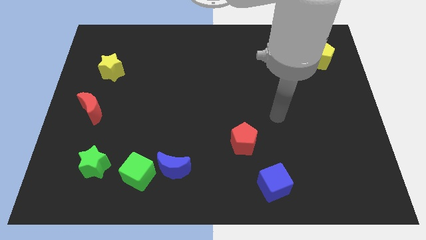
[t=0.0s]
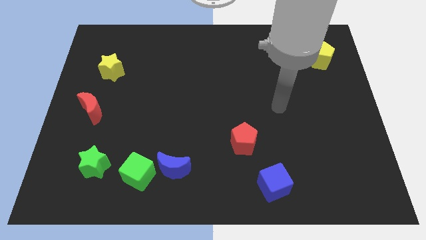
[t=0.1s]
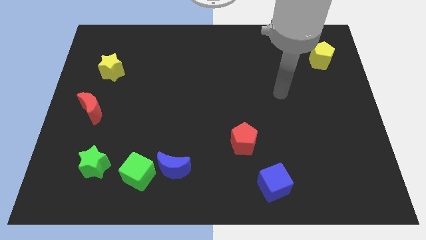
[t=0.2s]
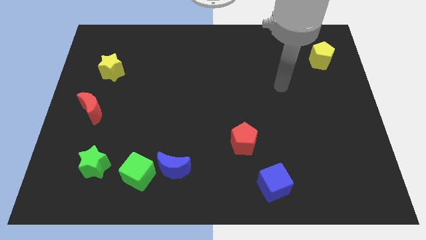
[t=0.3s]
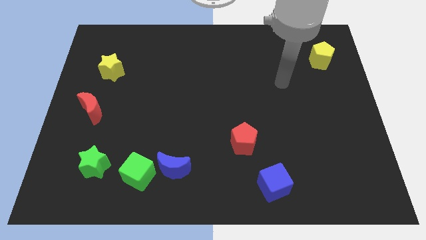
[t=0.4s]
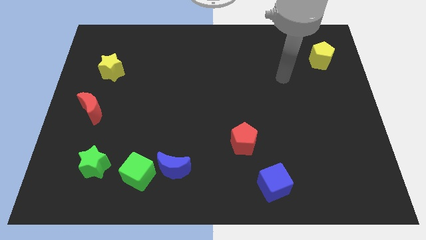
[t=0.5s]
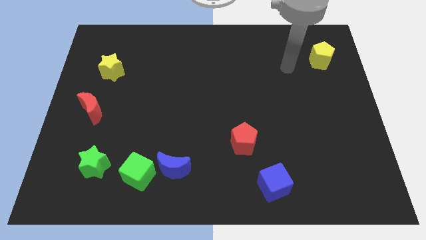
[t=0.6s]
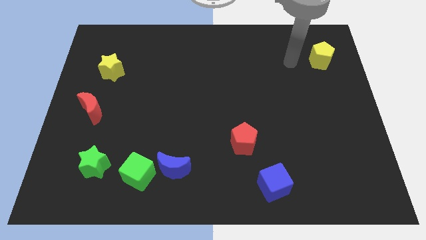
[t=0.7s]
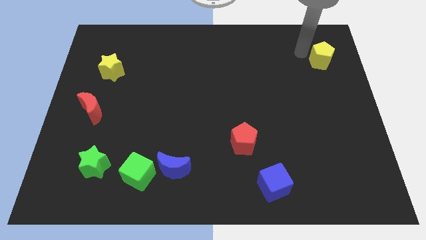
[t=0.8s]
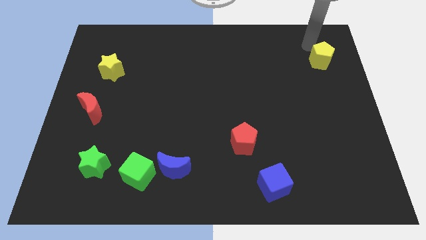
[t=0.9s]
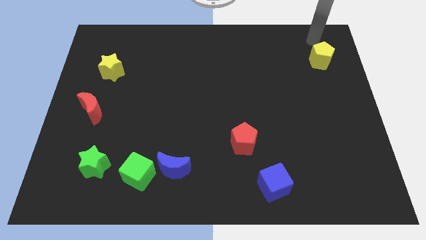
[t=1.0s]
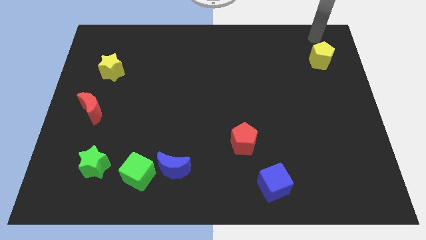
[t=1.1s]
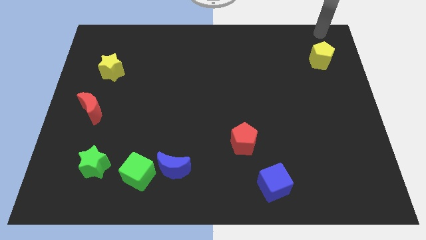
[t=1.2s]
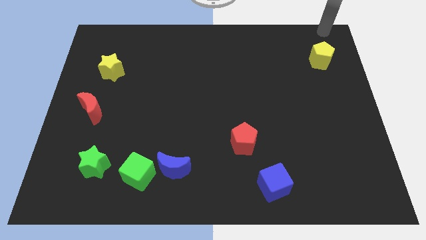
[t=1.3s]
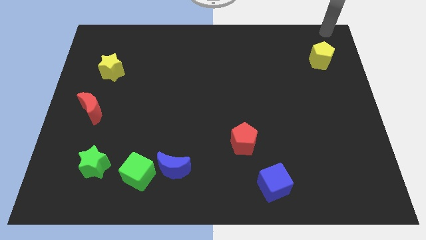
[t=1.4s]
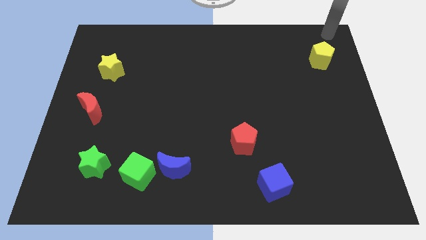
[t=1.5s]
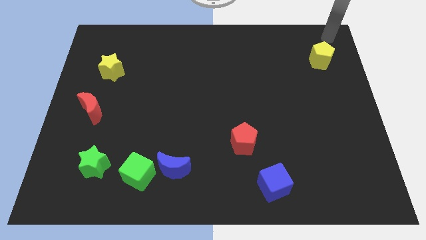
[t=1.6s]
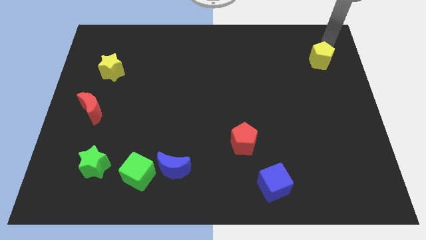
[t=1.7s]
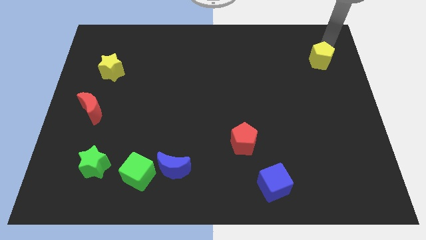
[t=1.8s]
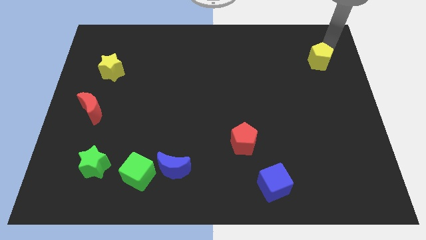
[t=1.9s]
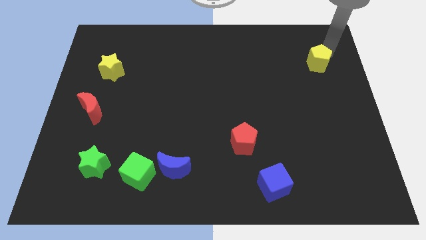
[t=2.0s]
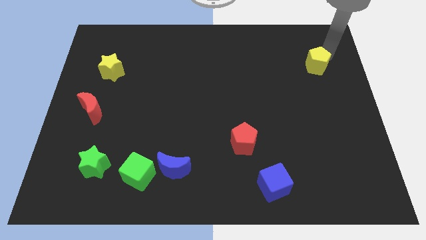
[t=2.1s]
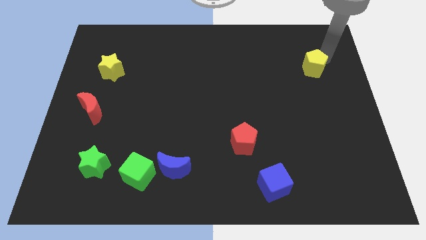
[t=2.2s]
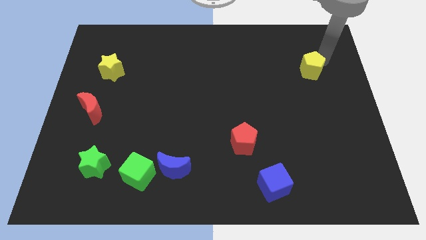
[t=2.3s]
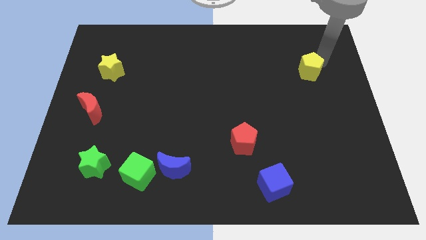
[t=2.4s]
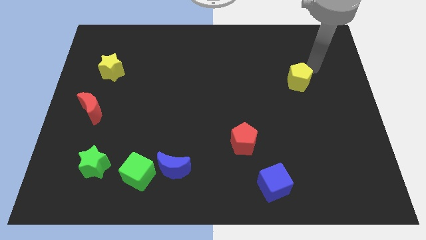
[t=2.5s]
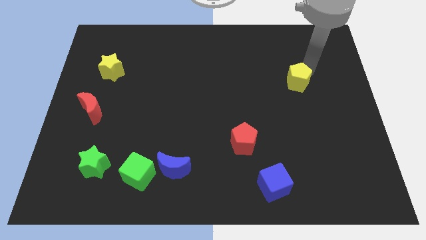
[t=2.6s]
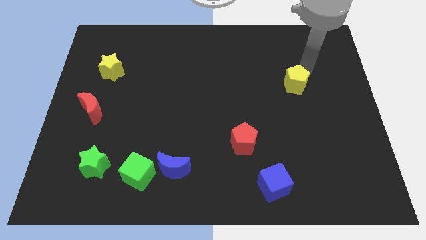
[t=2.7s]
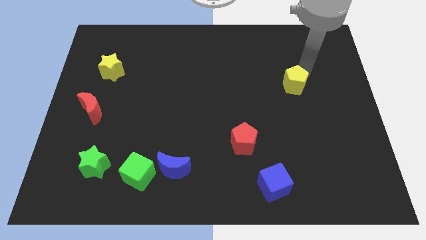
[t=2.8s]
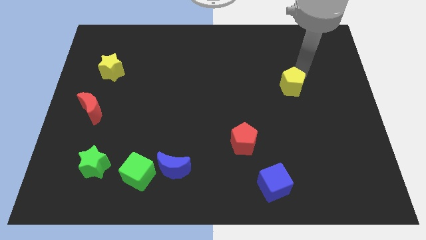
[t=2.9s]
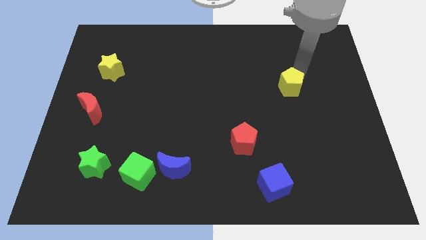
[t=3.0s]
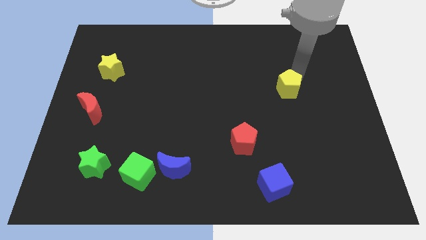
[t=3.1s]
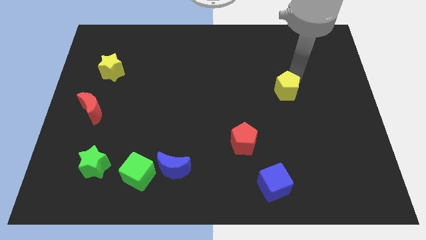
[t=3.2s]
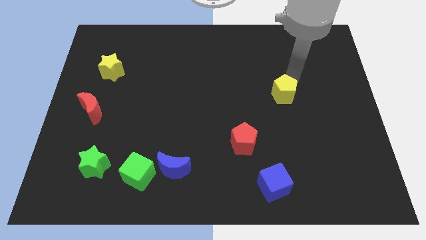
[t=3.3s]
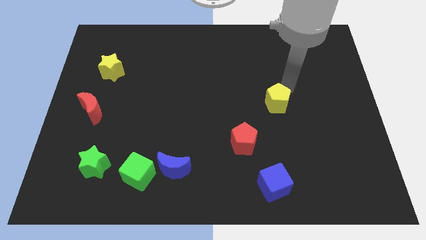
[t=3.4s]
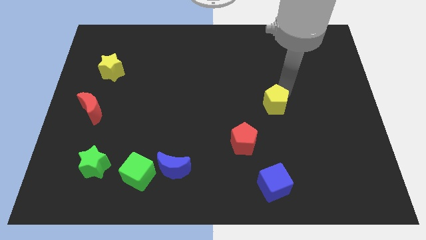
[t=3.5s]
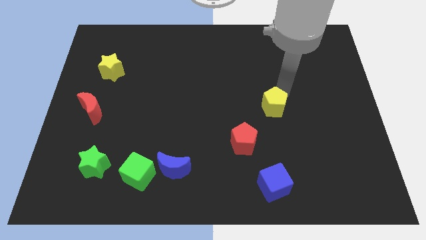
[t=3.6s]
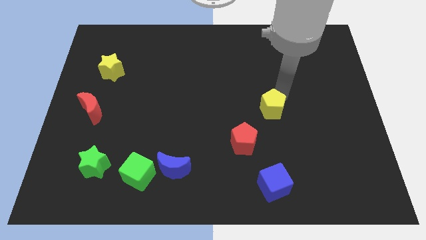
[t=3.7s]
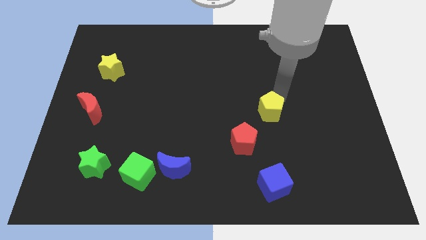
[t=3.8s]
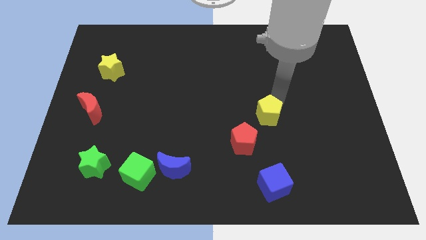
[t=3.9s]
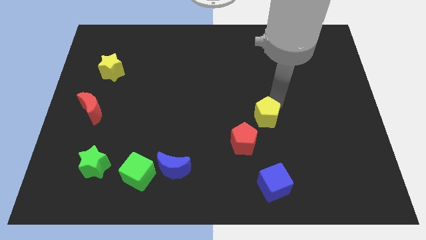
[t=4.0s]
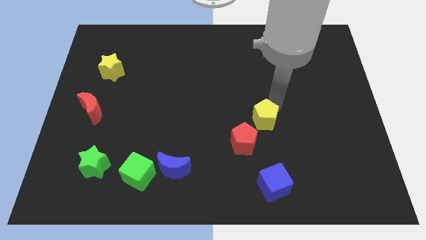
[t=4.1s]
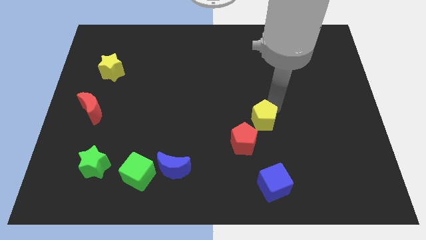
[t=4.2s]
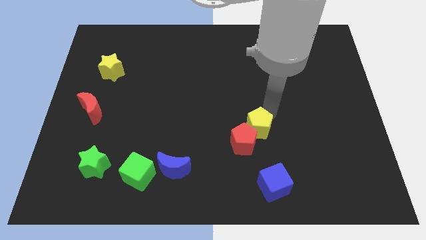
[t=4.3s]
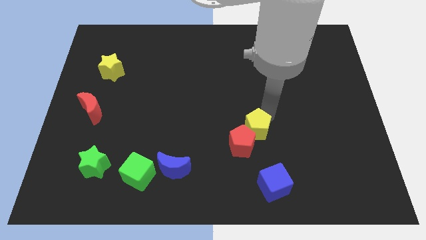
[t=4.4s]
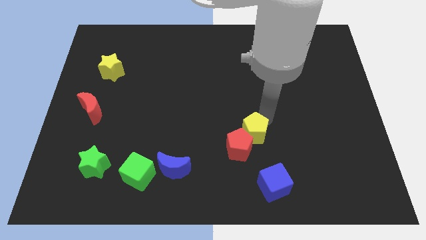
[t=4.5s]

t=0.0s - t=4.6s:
slide the yellow pentagon next to the red pentagon

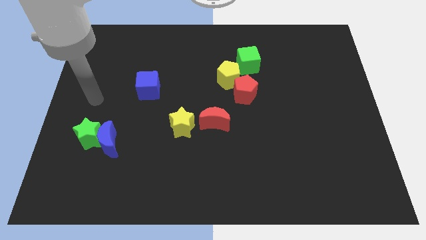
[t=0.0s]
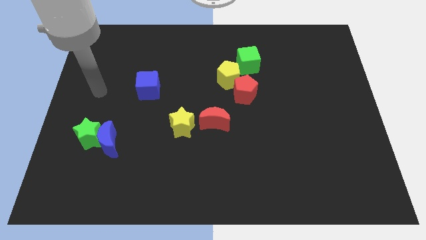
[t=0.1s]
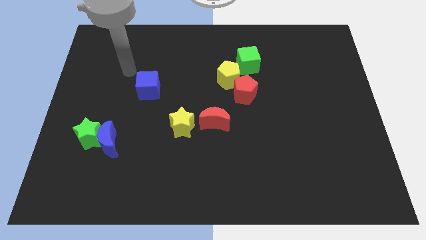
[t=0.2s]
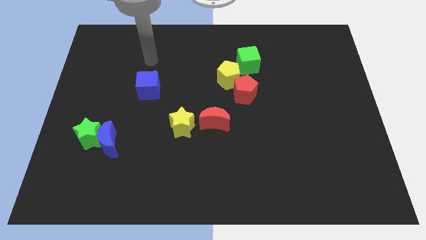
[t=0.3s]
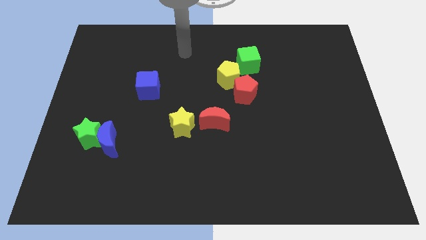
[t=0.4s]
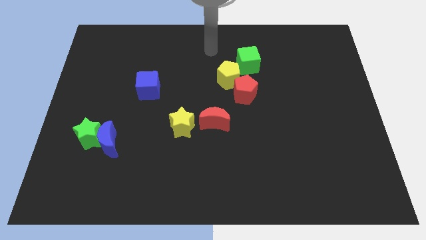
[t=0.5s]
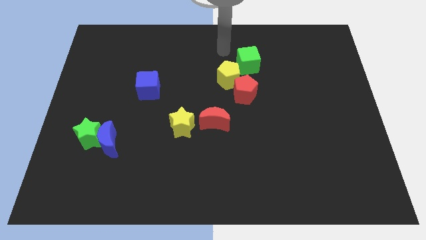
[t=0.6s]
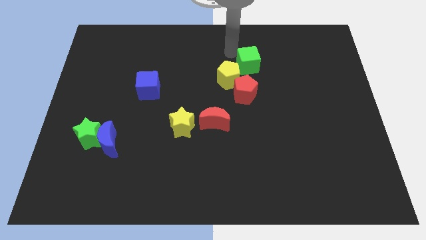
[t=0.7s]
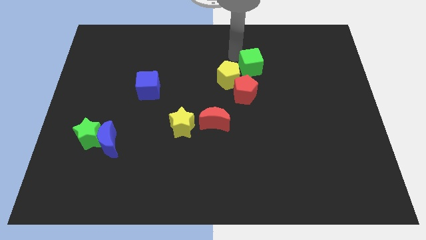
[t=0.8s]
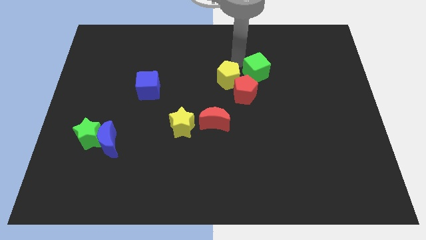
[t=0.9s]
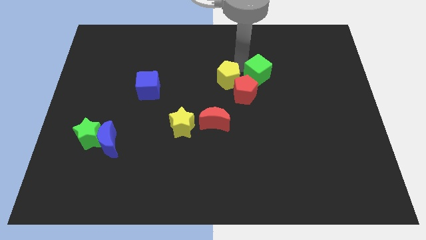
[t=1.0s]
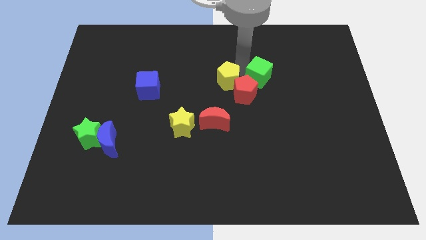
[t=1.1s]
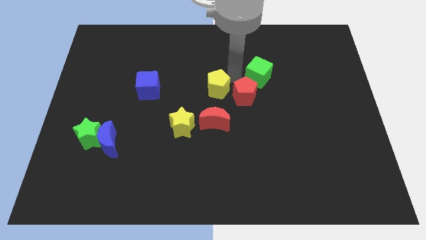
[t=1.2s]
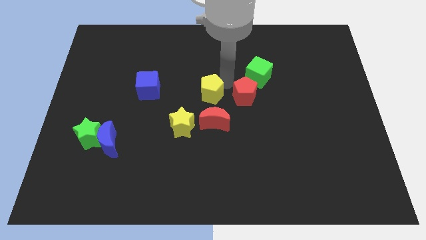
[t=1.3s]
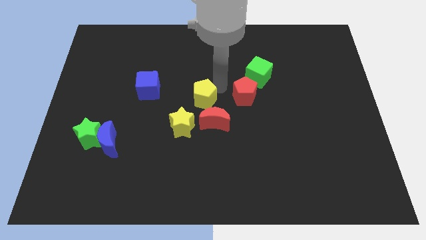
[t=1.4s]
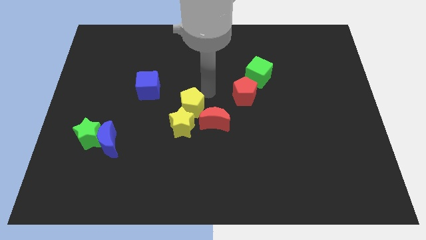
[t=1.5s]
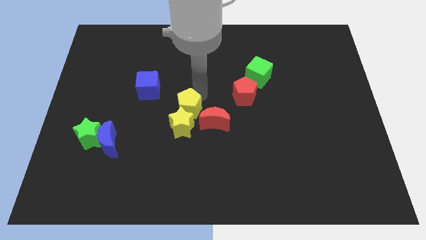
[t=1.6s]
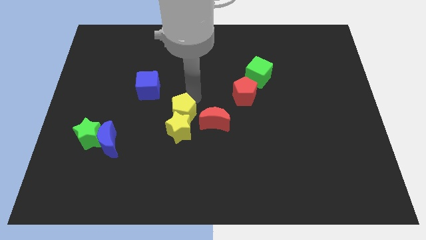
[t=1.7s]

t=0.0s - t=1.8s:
slide the yellow pentagon next to the yellow star

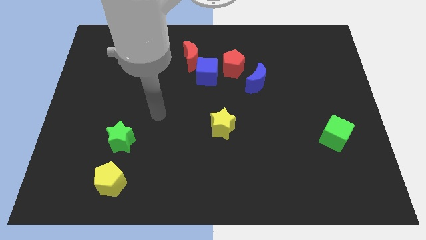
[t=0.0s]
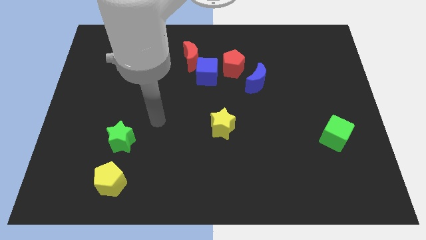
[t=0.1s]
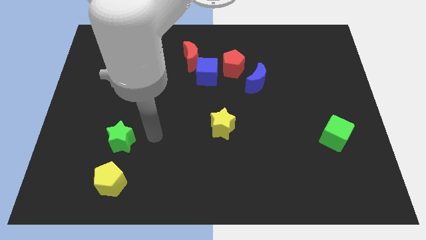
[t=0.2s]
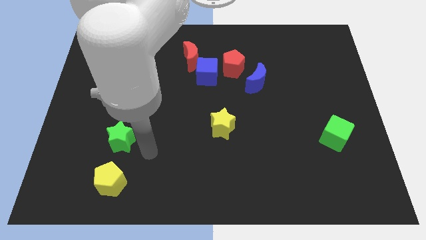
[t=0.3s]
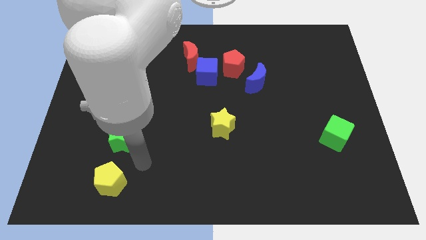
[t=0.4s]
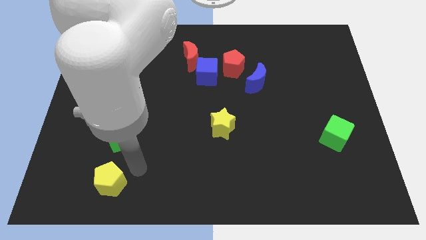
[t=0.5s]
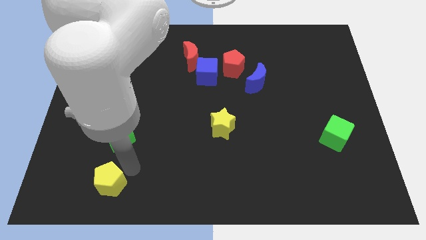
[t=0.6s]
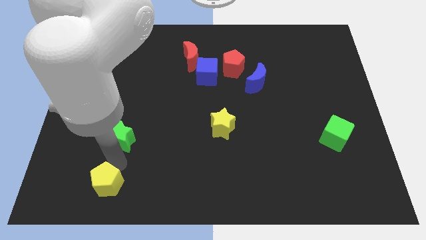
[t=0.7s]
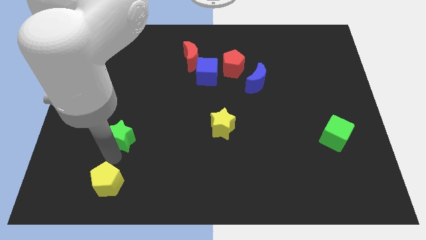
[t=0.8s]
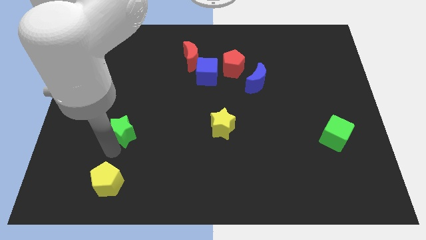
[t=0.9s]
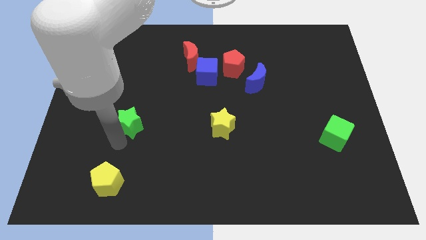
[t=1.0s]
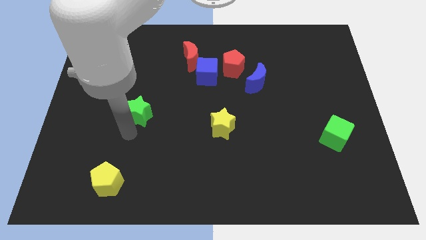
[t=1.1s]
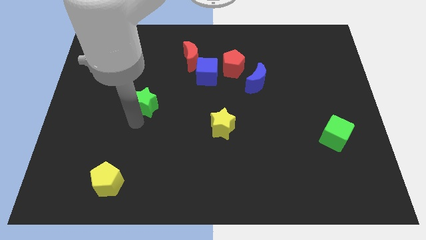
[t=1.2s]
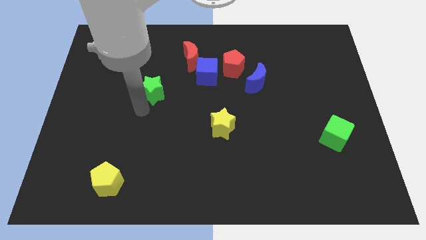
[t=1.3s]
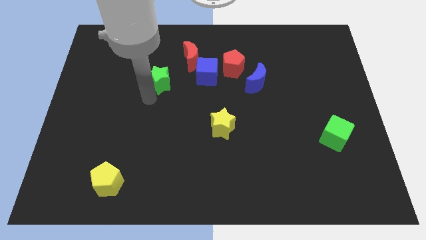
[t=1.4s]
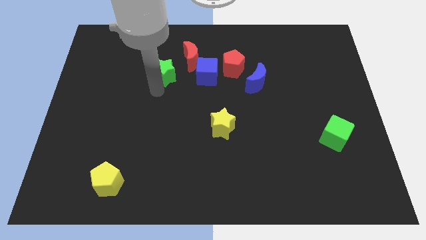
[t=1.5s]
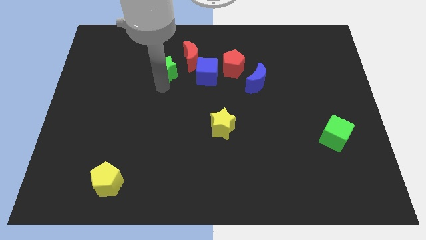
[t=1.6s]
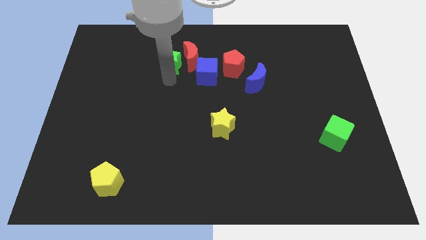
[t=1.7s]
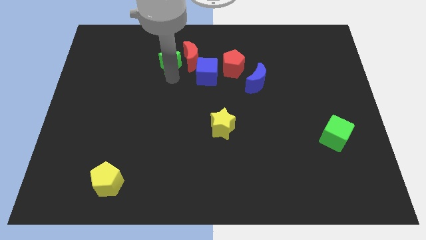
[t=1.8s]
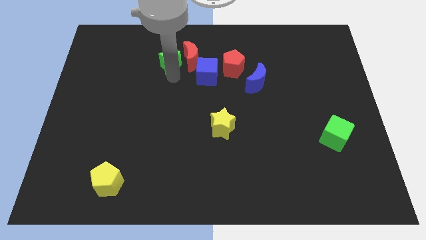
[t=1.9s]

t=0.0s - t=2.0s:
slide the green star close to the red moon
